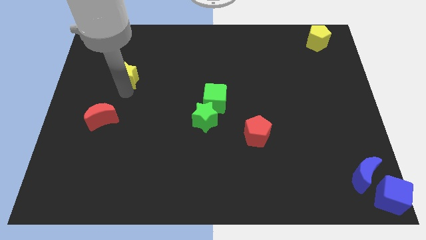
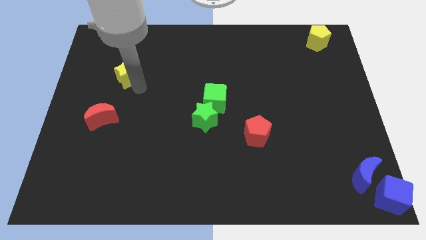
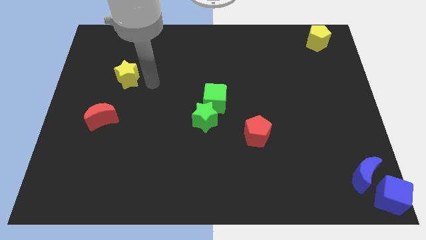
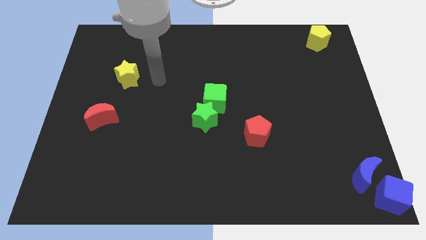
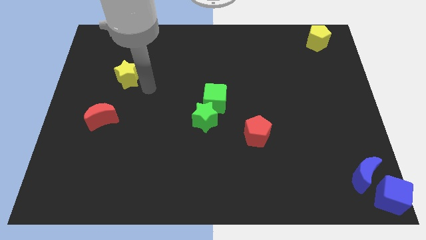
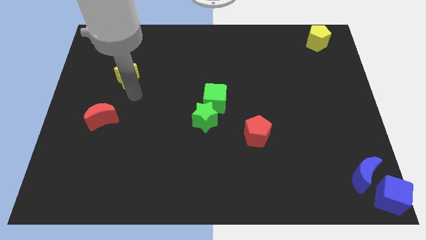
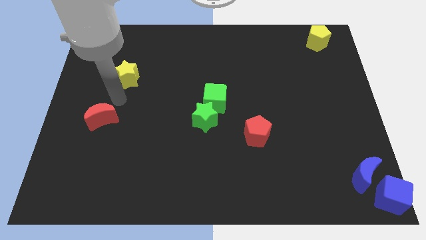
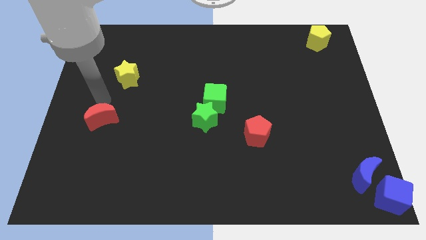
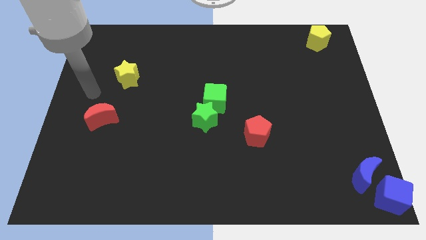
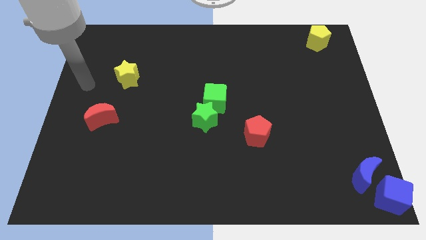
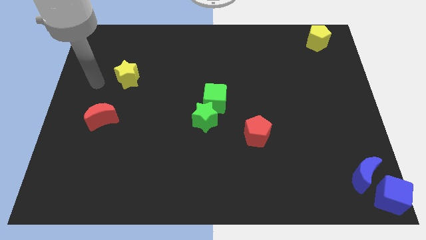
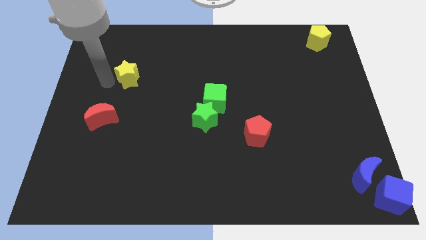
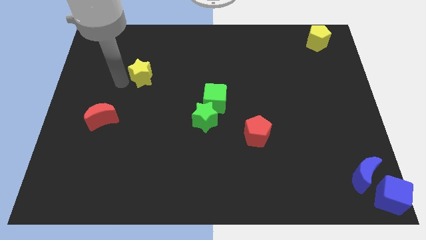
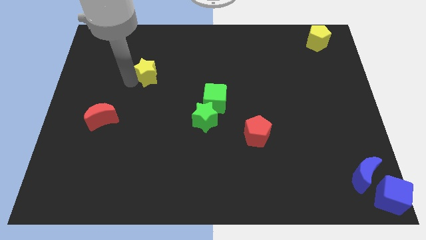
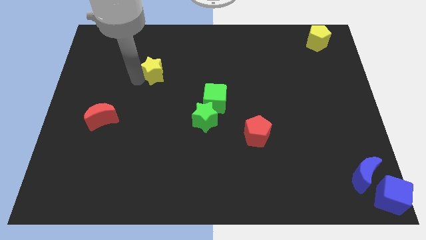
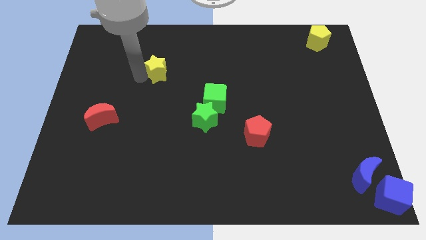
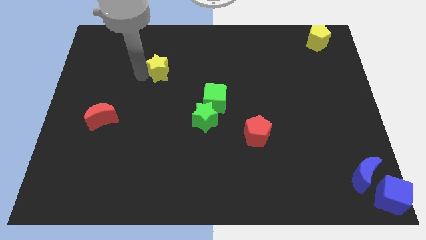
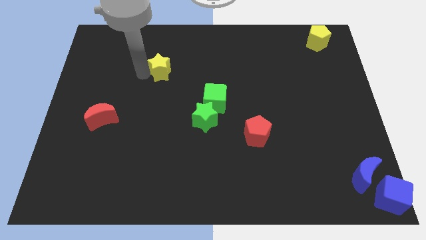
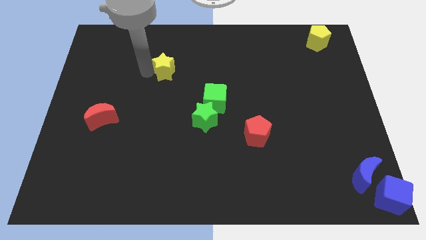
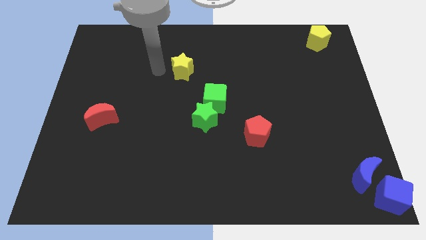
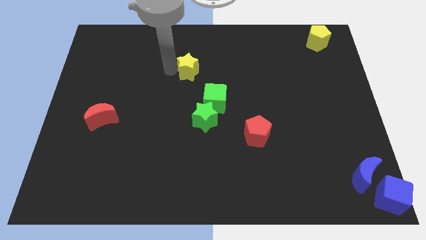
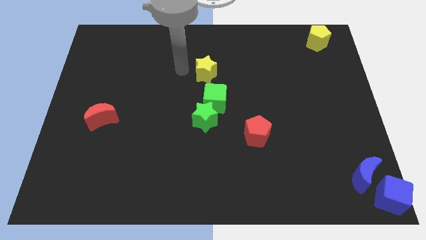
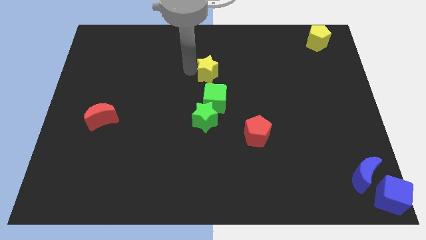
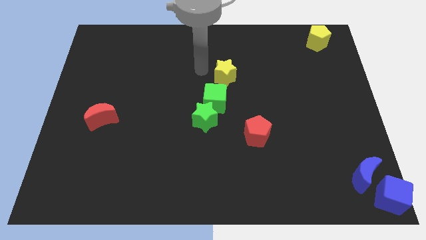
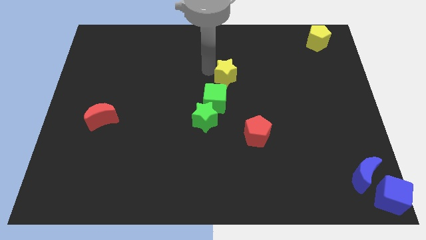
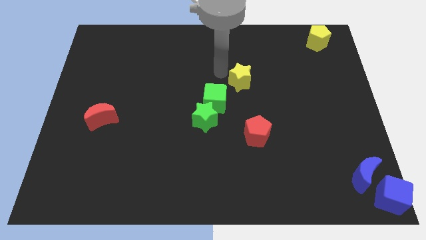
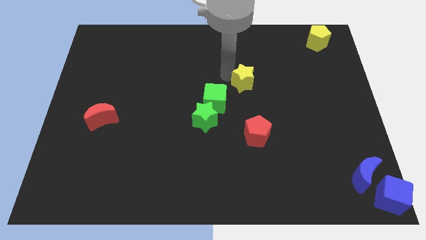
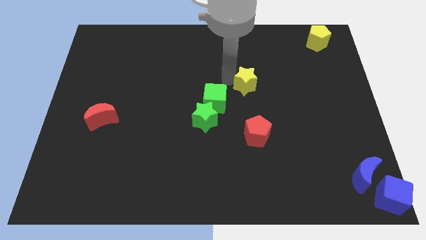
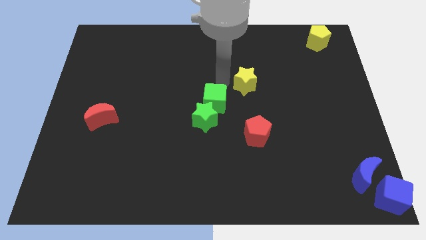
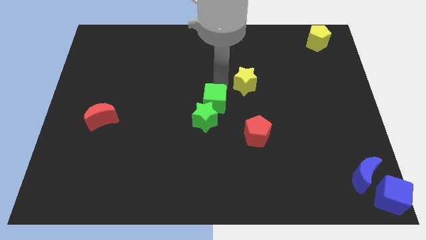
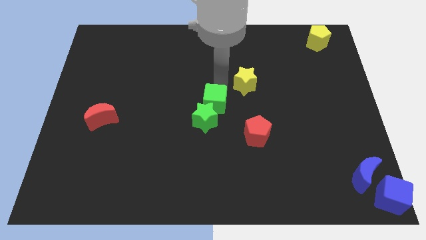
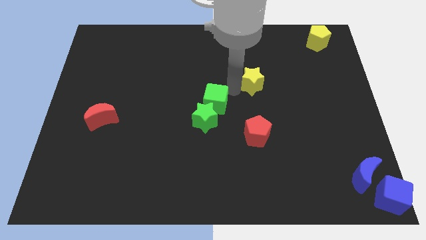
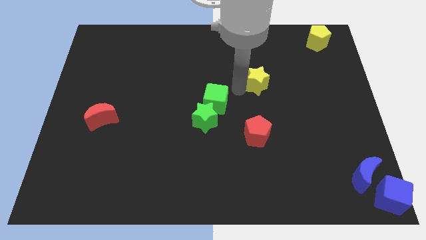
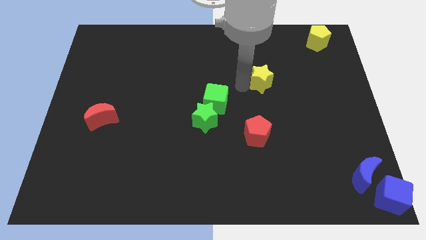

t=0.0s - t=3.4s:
push yellow star above red pentagon

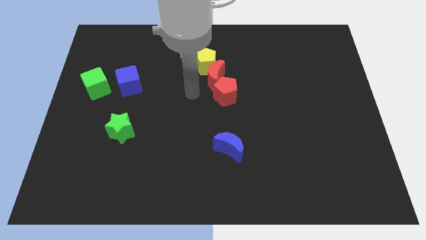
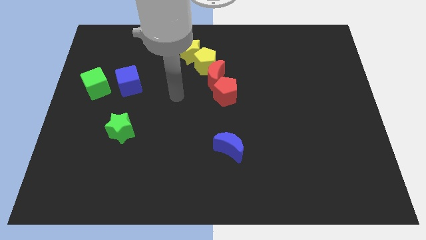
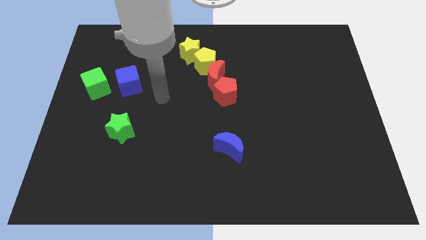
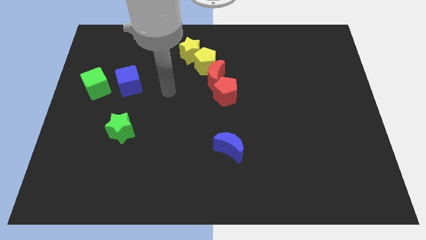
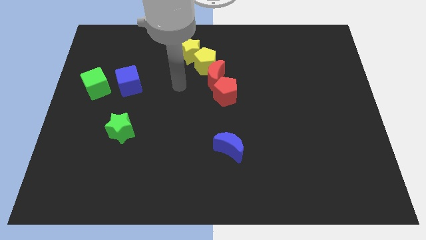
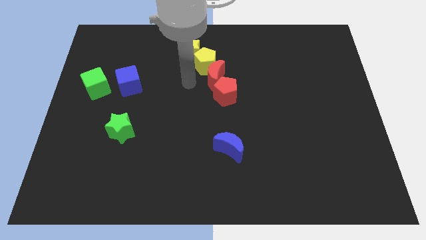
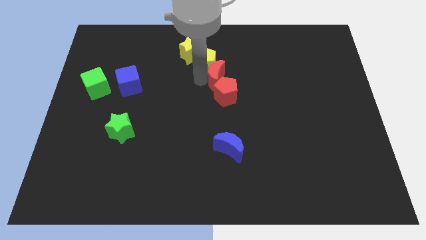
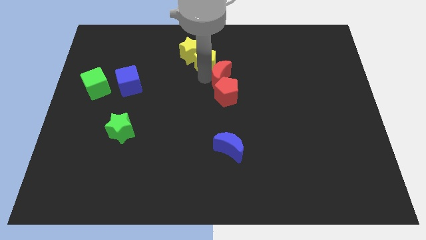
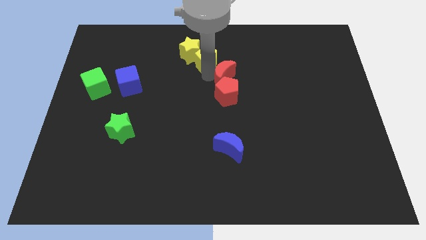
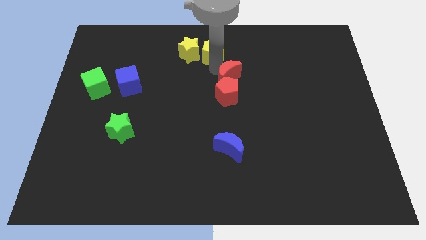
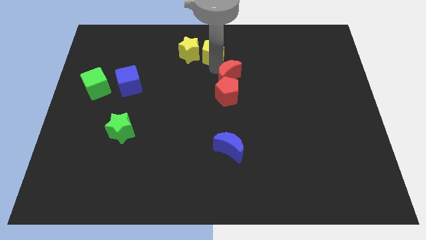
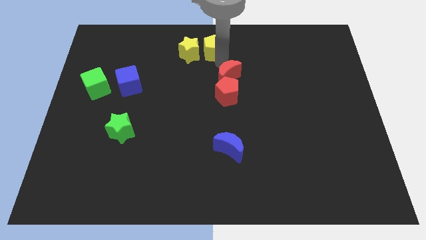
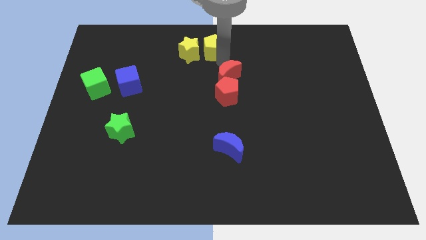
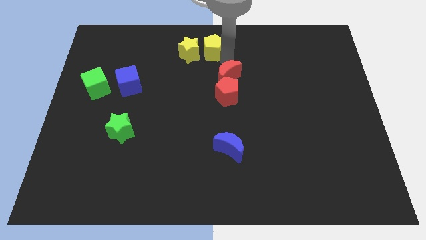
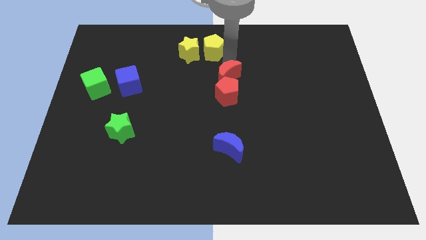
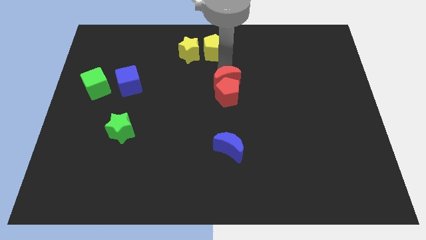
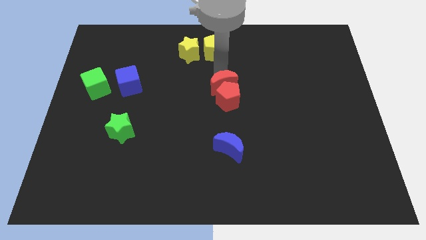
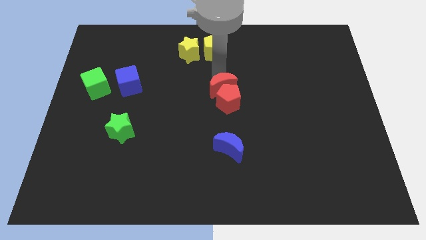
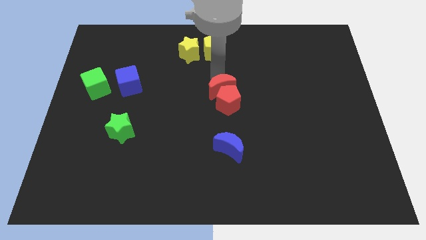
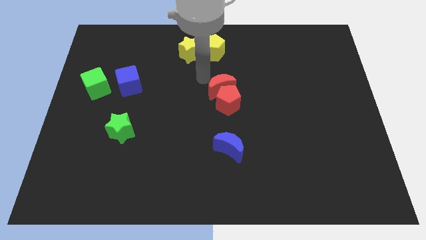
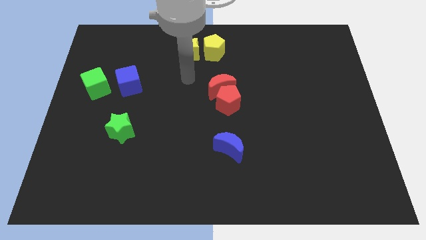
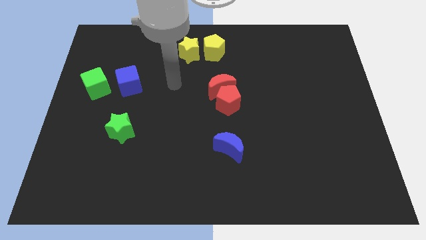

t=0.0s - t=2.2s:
push red crescent above red pentagon

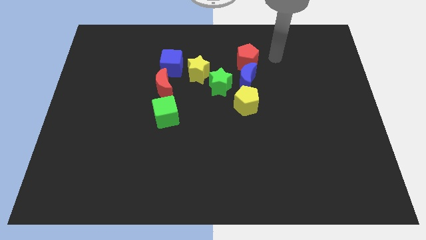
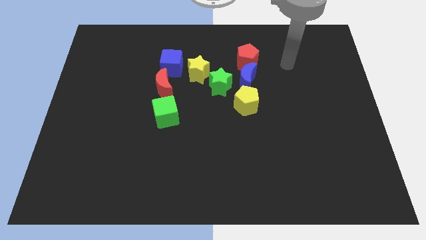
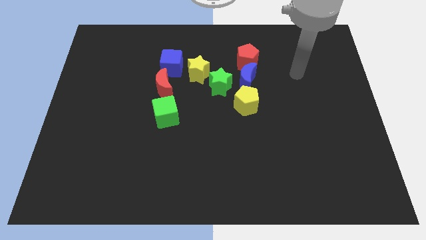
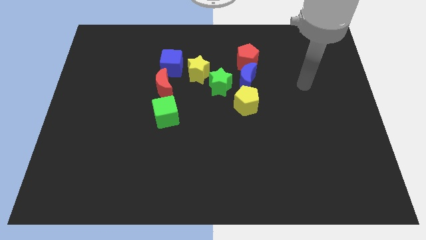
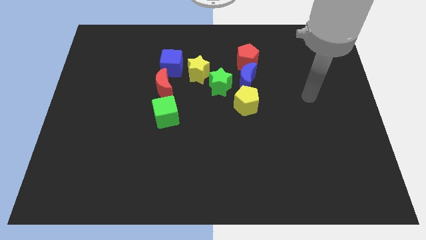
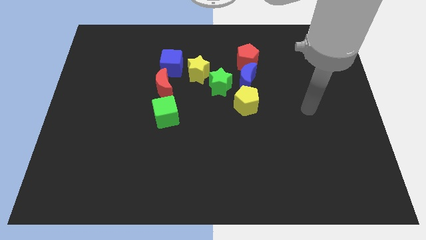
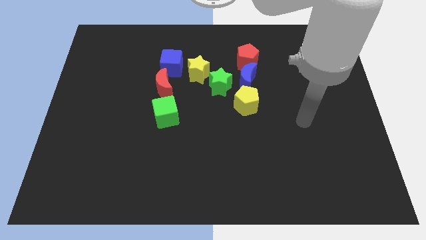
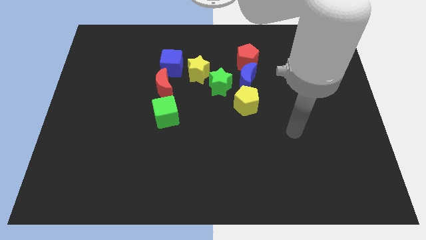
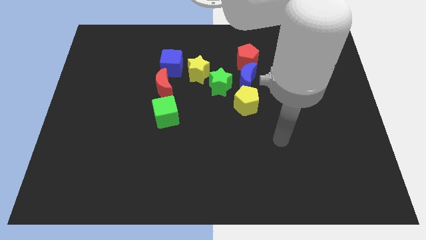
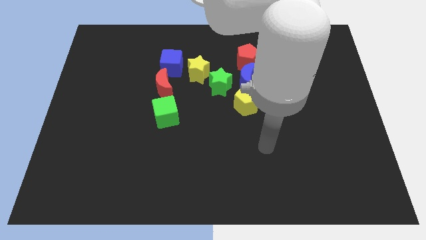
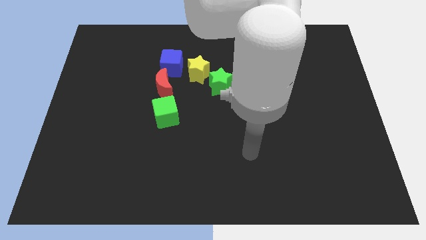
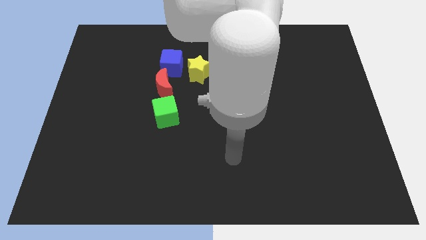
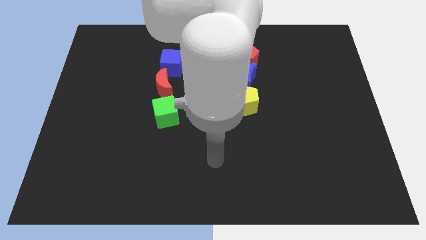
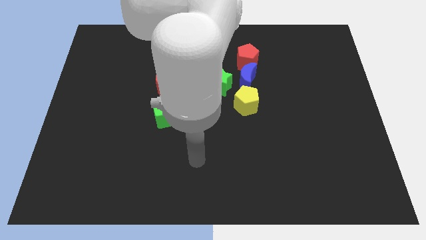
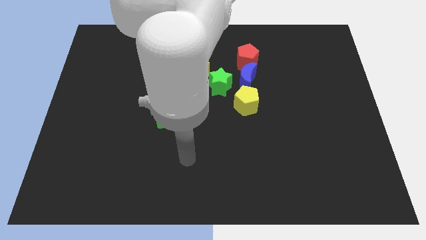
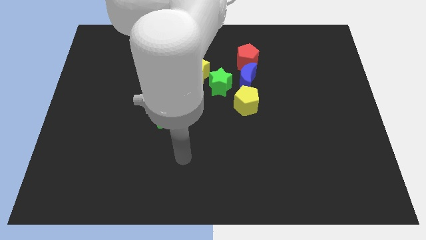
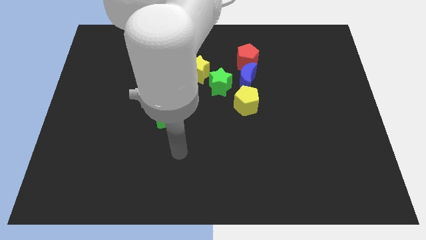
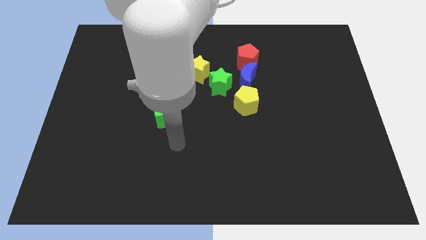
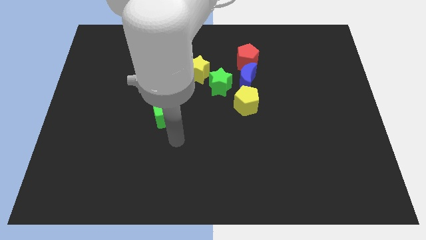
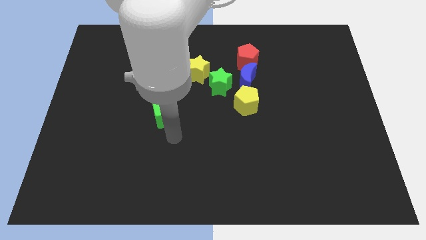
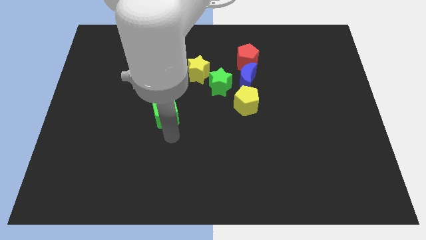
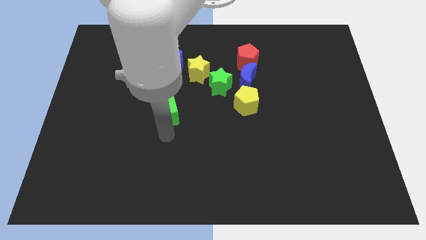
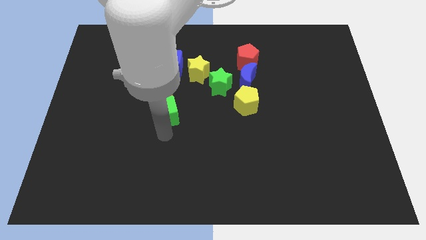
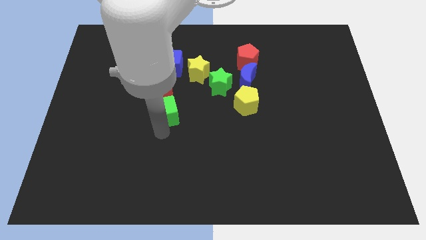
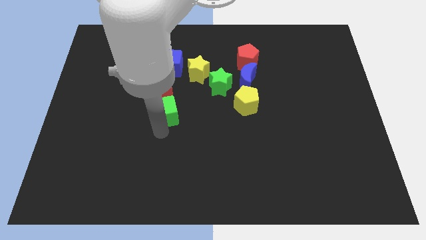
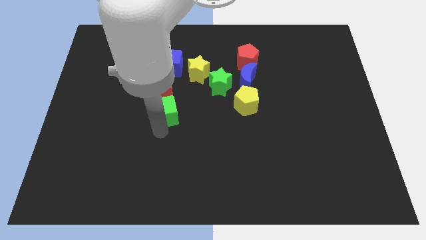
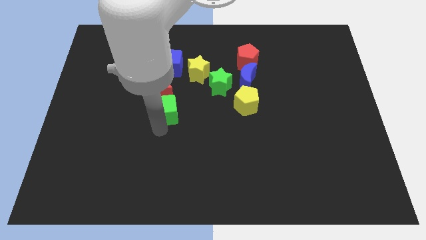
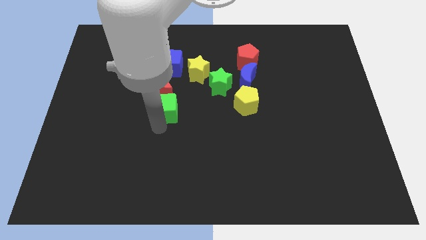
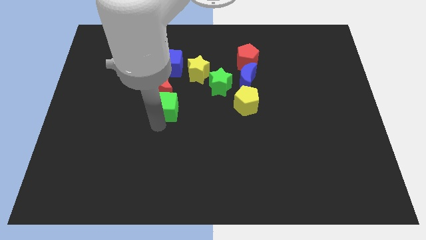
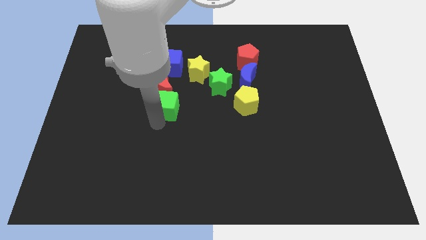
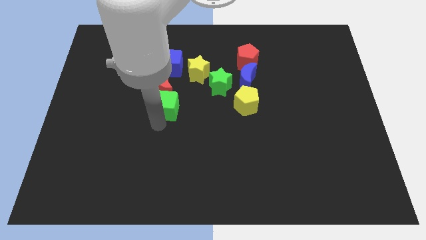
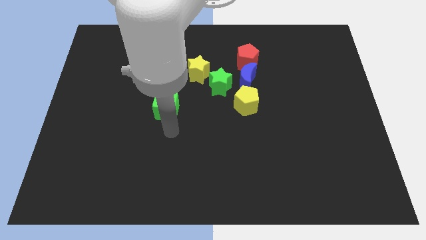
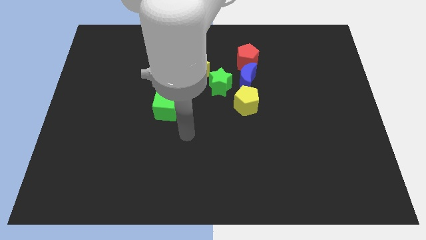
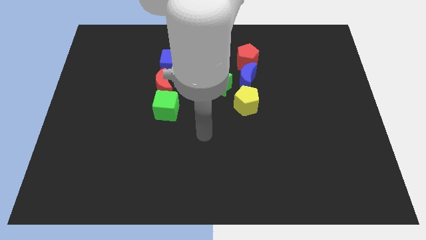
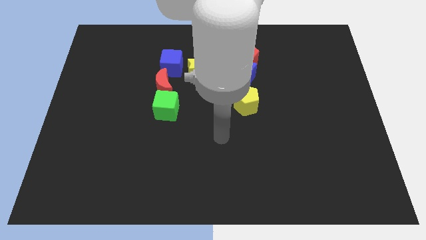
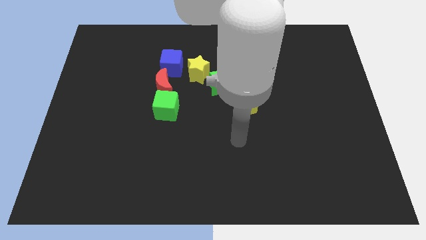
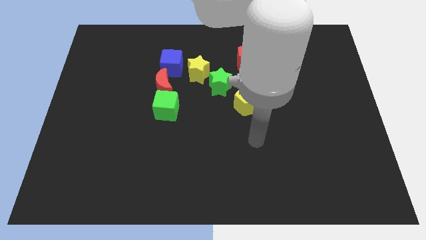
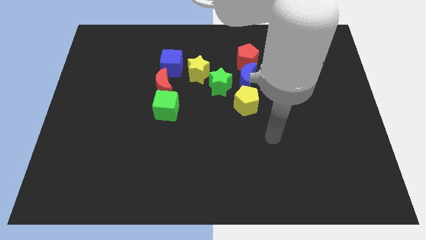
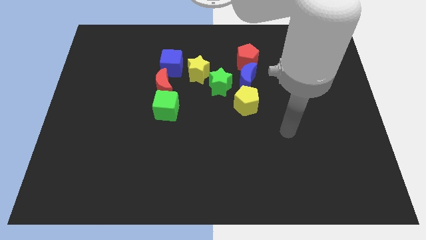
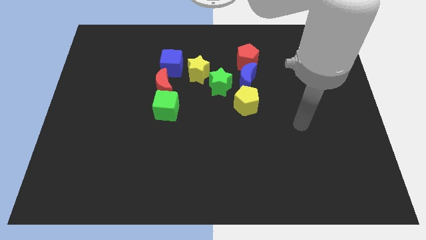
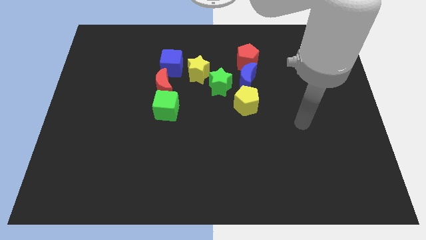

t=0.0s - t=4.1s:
move the green cube below the red crescent
